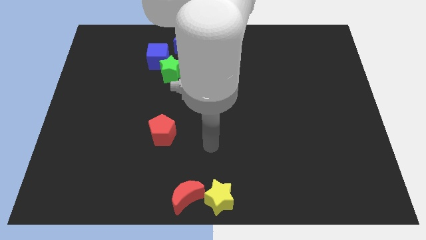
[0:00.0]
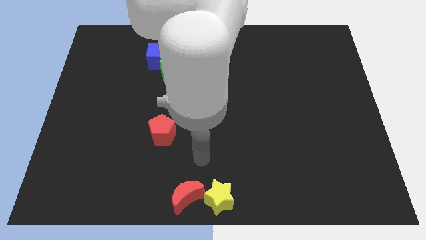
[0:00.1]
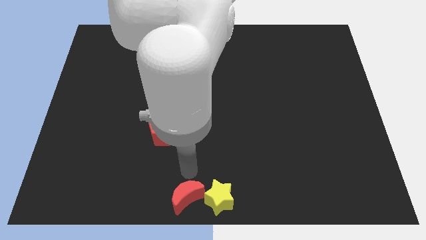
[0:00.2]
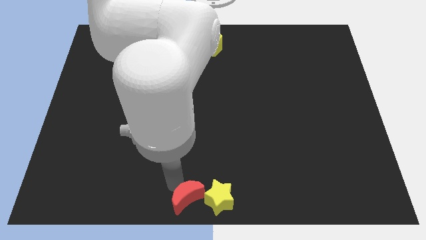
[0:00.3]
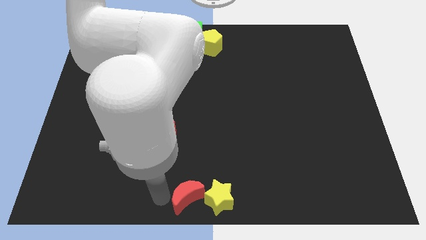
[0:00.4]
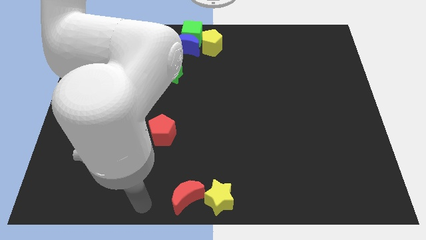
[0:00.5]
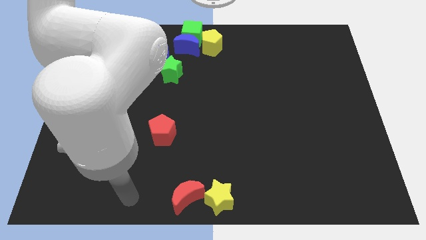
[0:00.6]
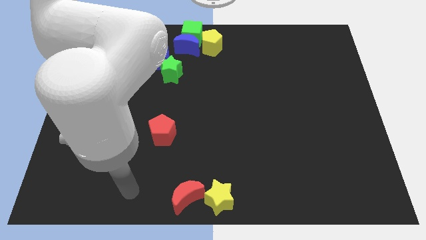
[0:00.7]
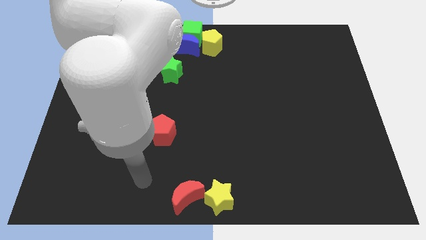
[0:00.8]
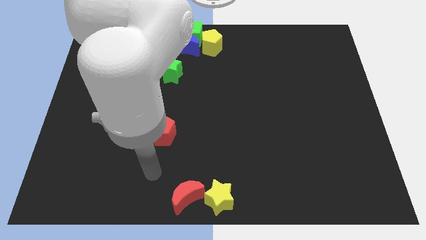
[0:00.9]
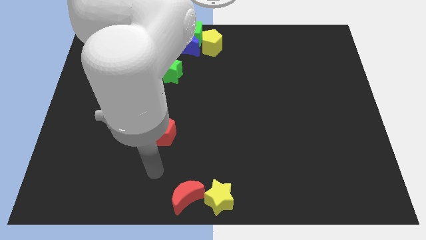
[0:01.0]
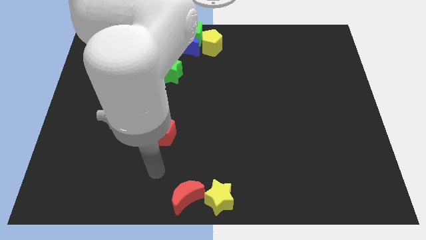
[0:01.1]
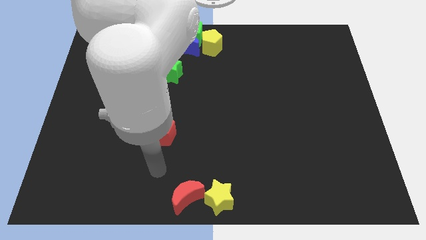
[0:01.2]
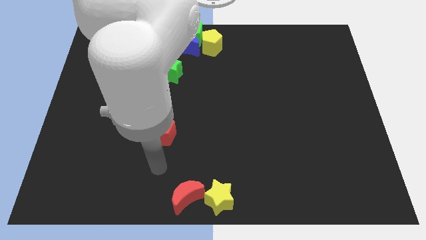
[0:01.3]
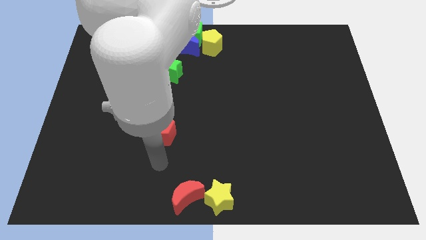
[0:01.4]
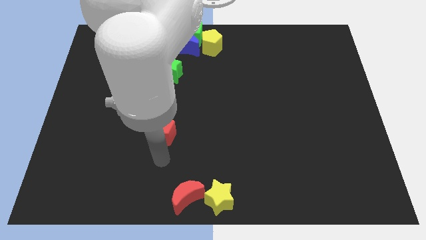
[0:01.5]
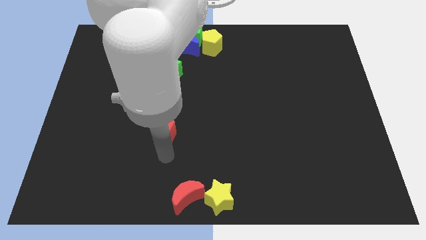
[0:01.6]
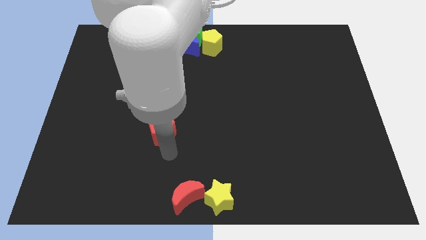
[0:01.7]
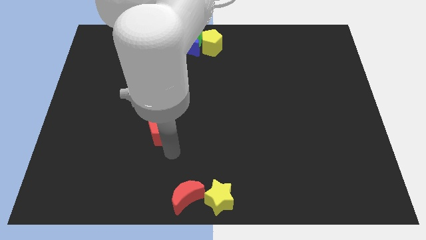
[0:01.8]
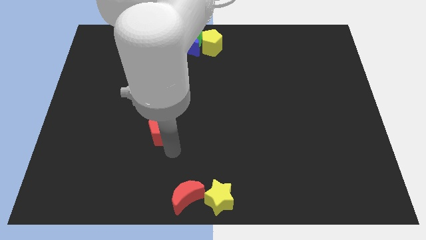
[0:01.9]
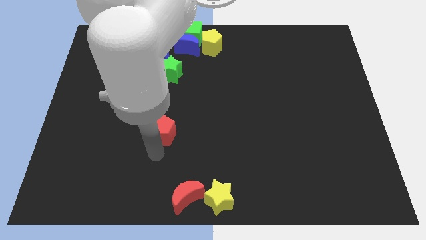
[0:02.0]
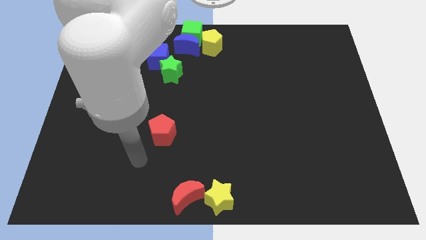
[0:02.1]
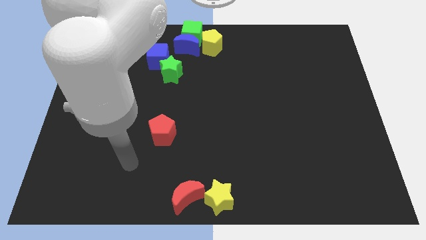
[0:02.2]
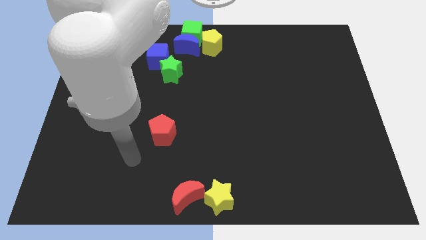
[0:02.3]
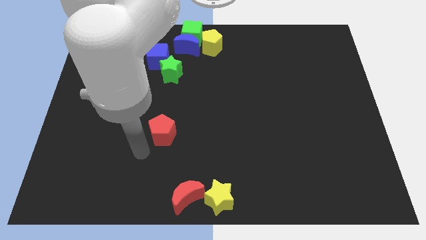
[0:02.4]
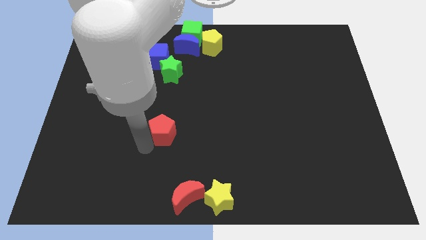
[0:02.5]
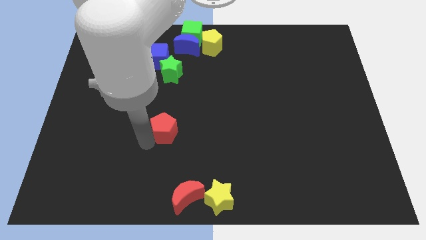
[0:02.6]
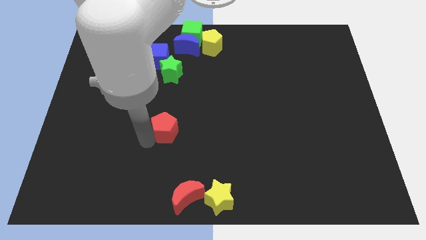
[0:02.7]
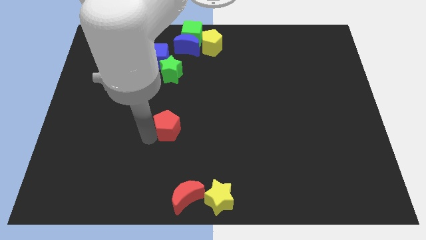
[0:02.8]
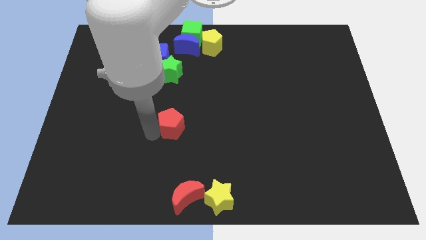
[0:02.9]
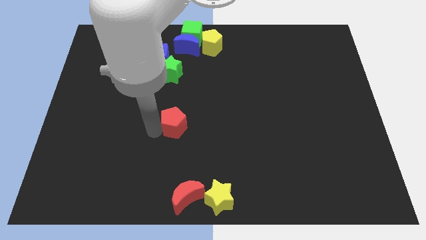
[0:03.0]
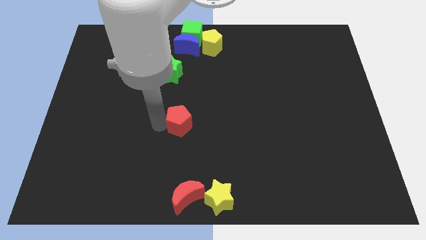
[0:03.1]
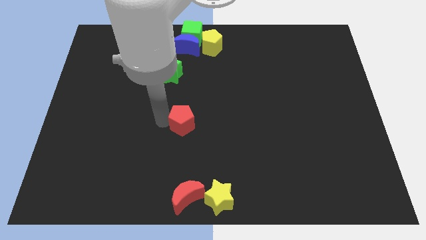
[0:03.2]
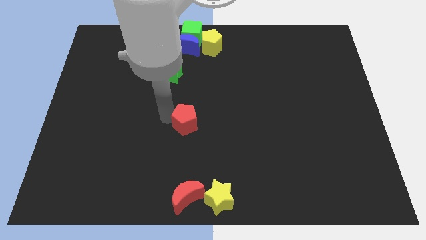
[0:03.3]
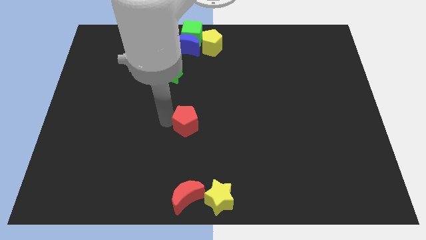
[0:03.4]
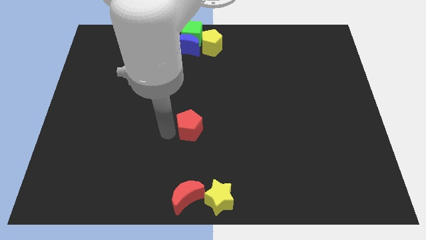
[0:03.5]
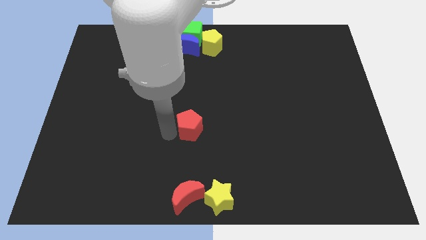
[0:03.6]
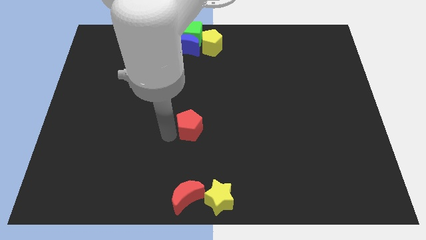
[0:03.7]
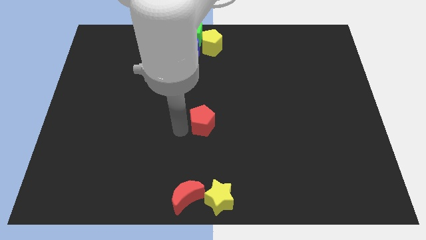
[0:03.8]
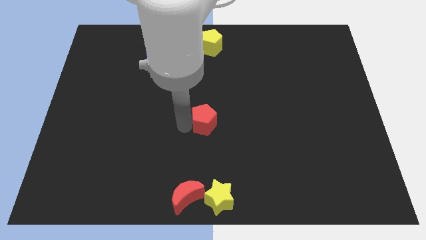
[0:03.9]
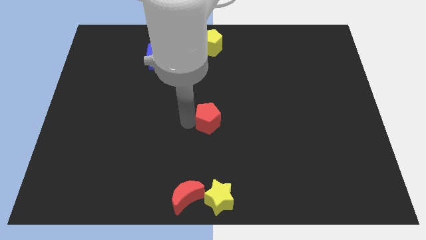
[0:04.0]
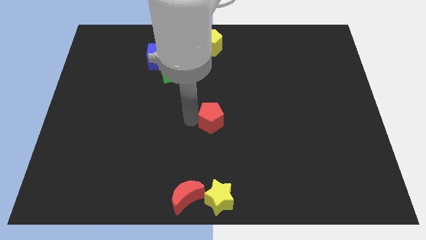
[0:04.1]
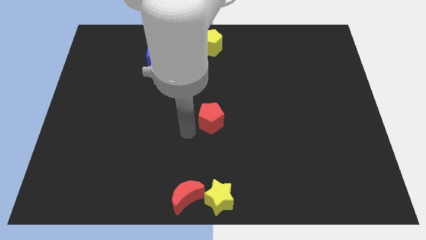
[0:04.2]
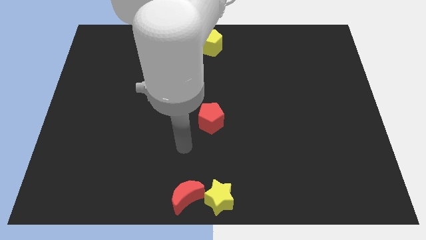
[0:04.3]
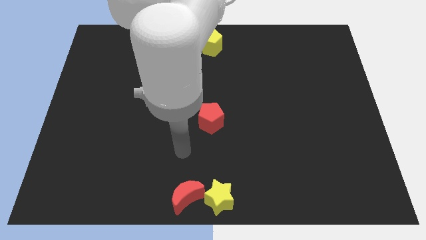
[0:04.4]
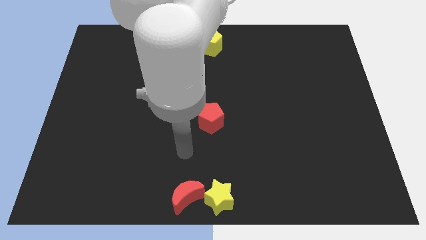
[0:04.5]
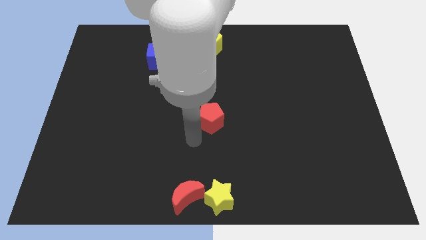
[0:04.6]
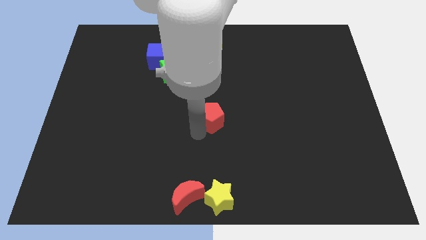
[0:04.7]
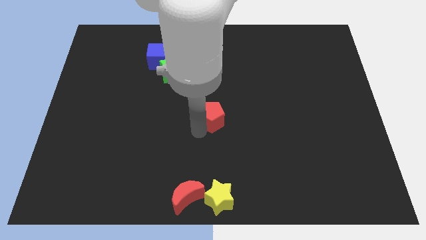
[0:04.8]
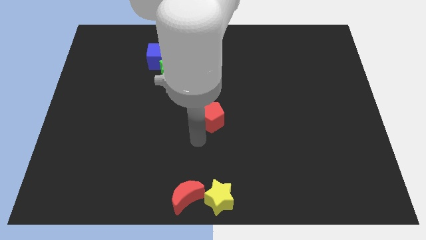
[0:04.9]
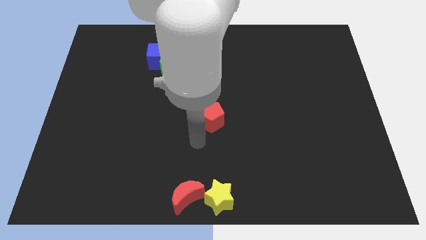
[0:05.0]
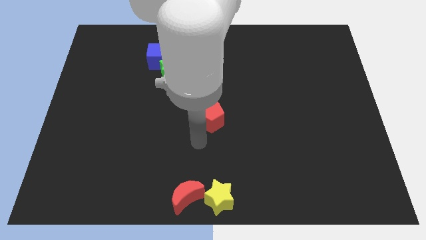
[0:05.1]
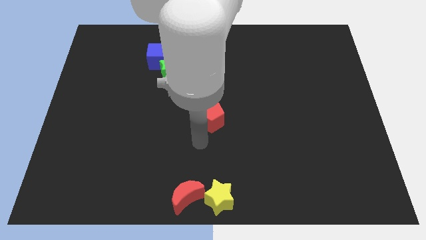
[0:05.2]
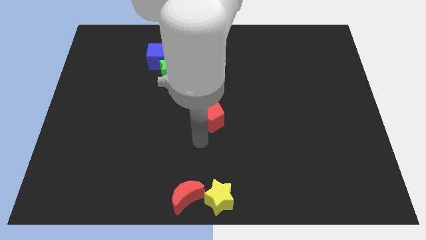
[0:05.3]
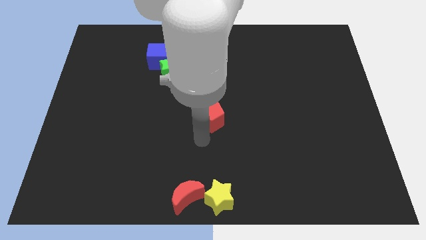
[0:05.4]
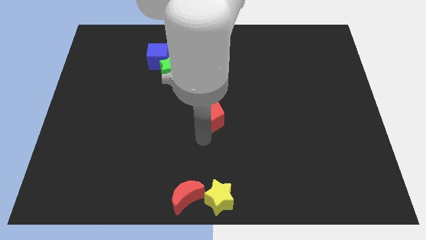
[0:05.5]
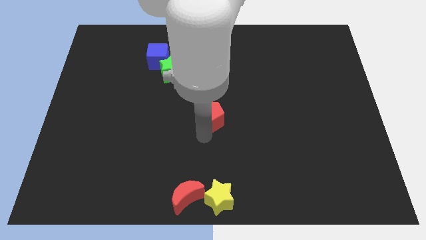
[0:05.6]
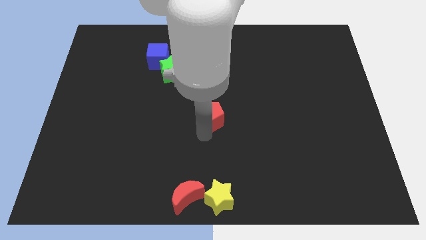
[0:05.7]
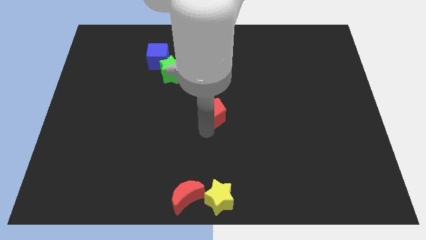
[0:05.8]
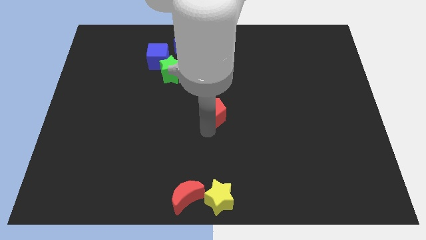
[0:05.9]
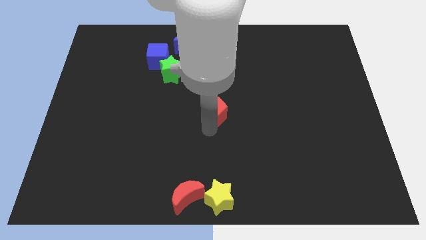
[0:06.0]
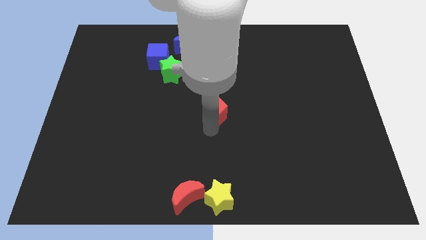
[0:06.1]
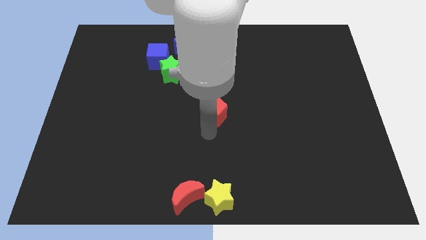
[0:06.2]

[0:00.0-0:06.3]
place the red pentagon at the center of the table

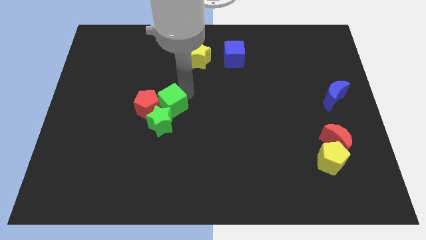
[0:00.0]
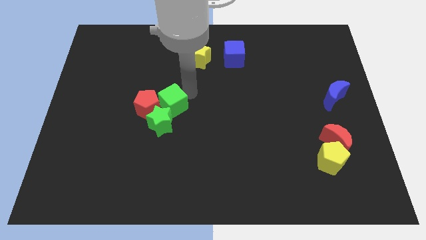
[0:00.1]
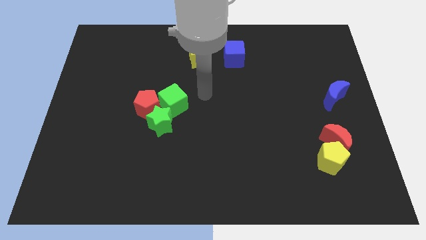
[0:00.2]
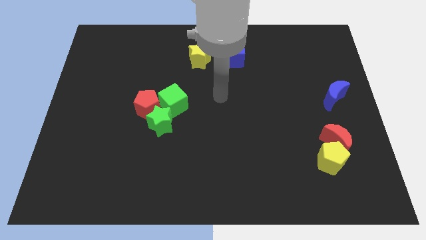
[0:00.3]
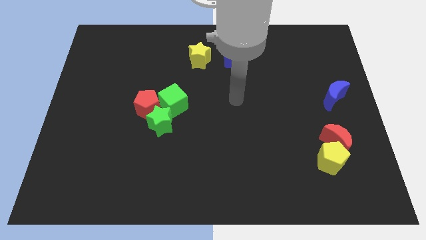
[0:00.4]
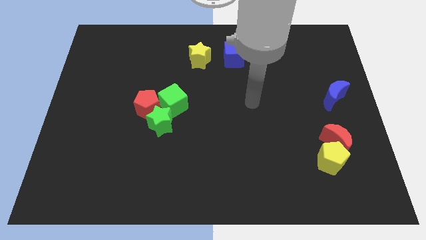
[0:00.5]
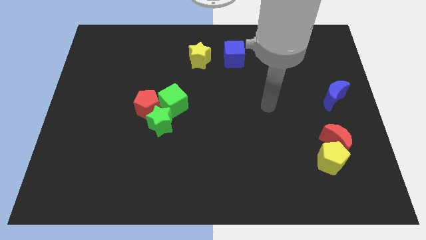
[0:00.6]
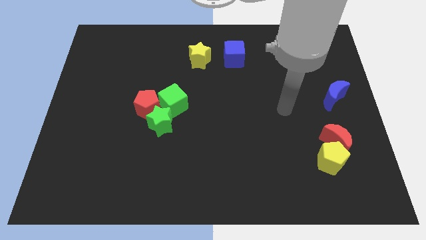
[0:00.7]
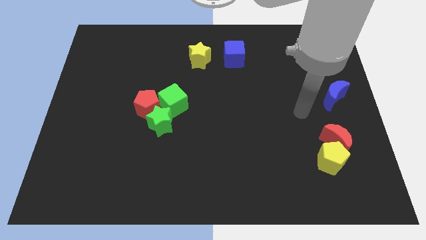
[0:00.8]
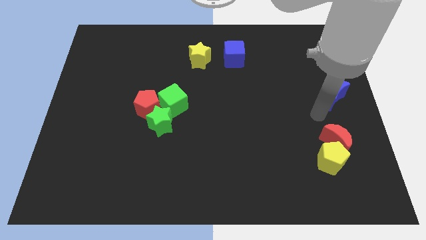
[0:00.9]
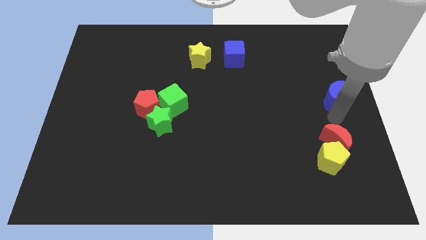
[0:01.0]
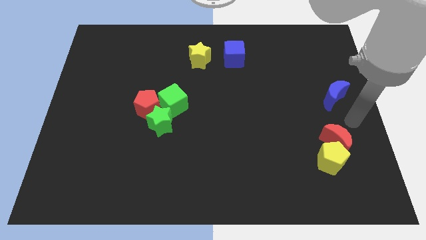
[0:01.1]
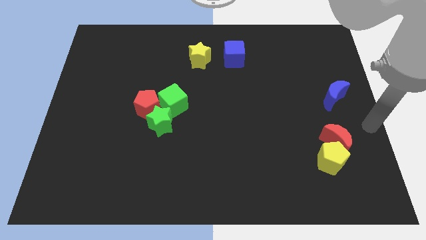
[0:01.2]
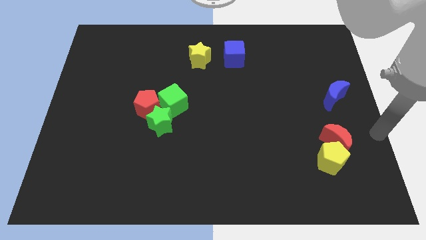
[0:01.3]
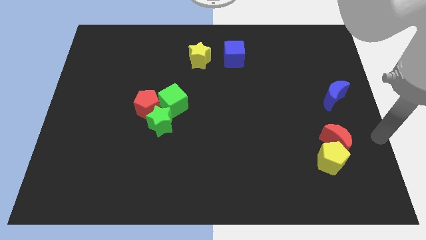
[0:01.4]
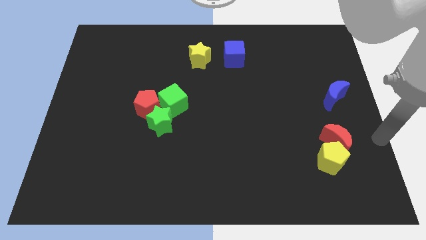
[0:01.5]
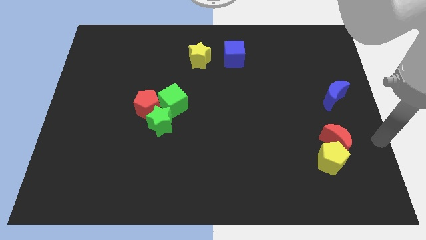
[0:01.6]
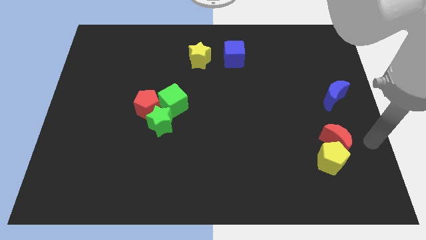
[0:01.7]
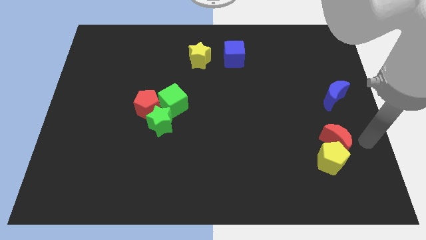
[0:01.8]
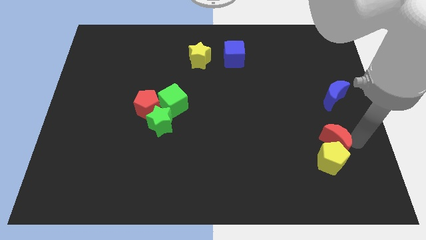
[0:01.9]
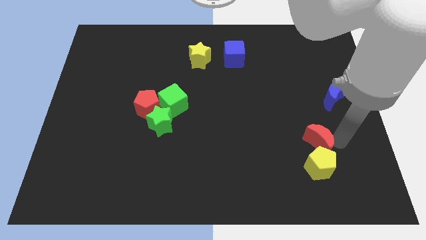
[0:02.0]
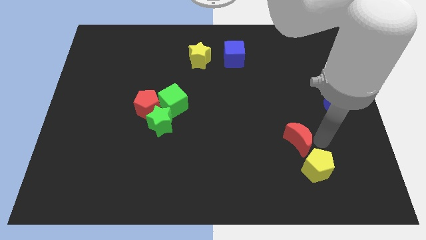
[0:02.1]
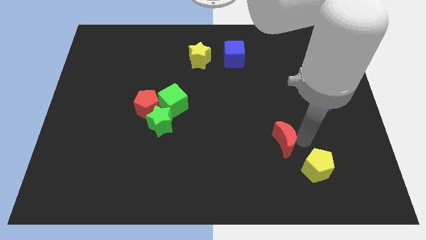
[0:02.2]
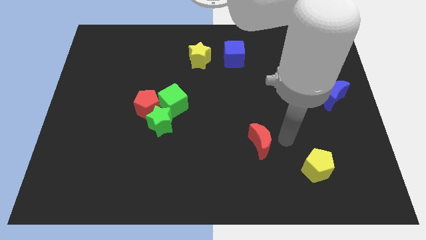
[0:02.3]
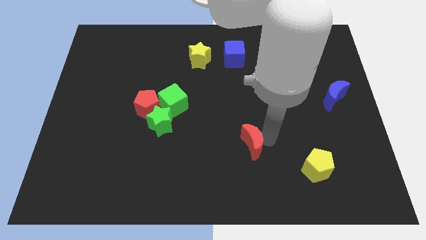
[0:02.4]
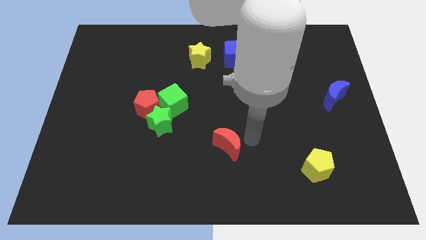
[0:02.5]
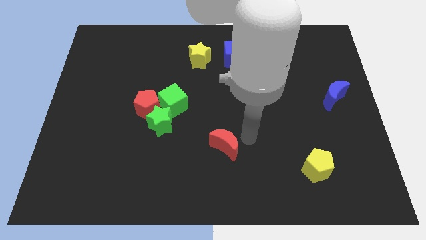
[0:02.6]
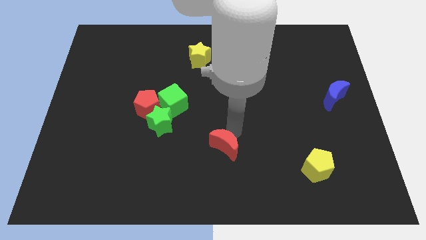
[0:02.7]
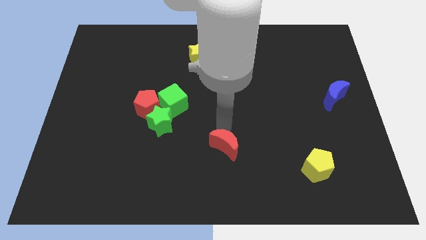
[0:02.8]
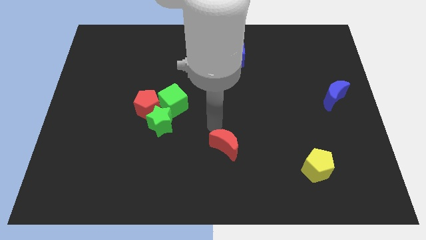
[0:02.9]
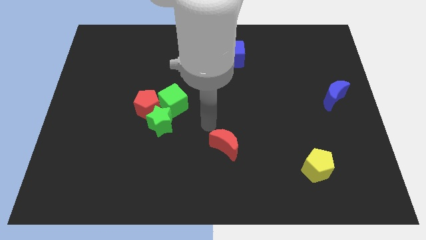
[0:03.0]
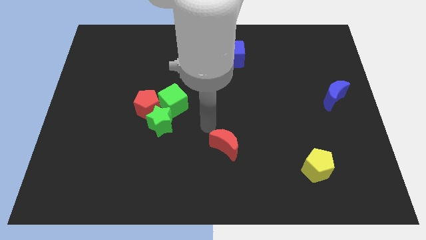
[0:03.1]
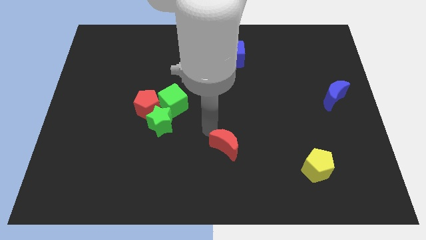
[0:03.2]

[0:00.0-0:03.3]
place the red moon left to the yellow pentagon
